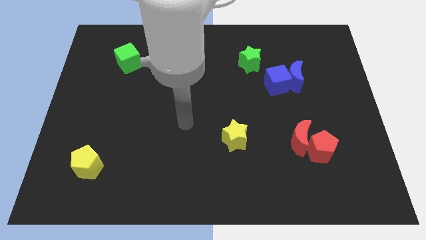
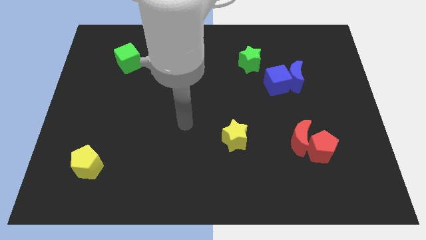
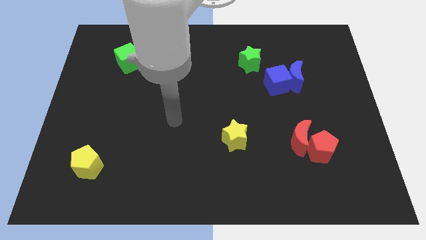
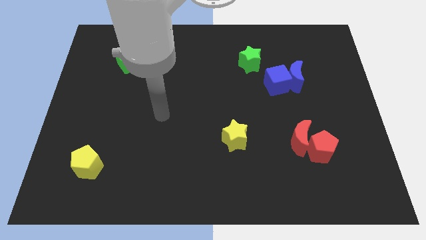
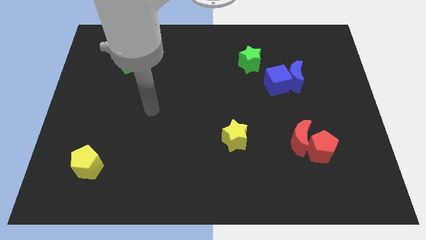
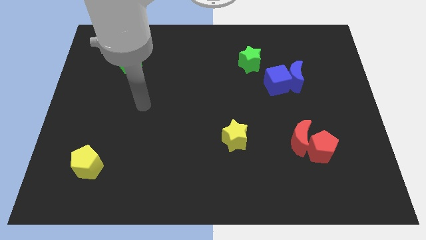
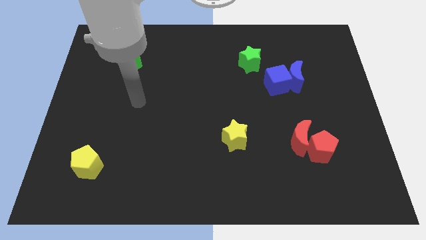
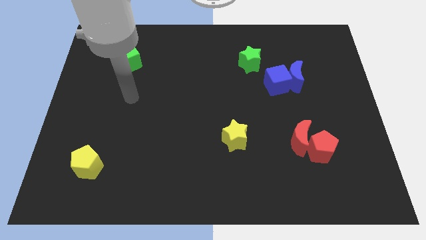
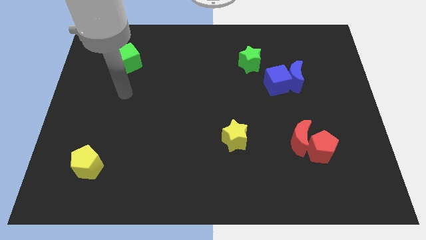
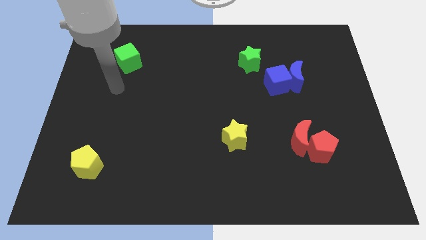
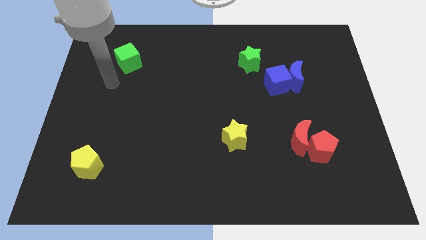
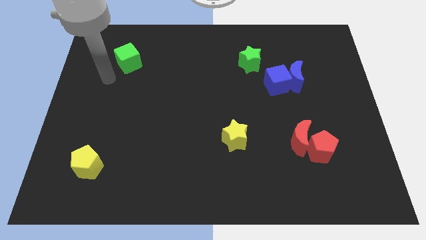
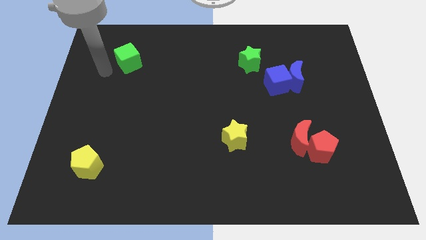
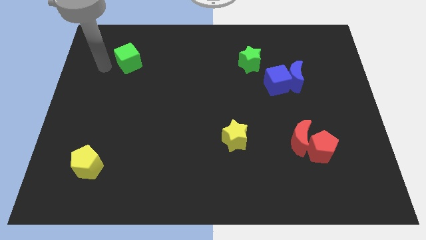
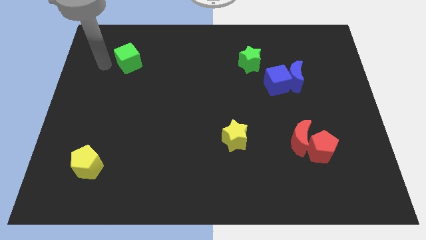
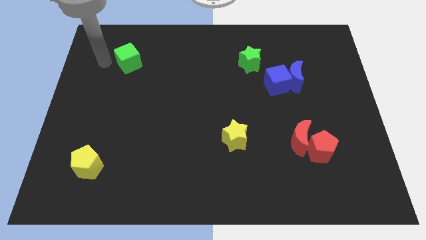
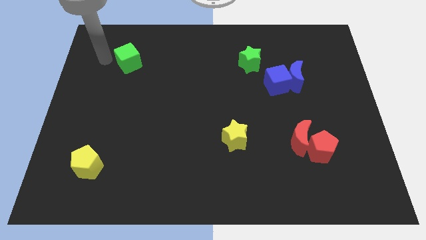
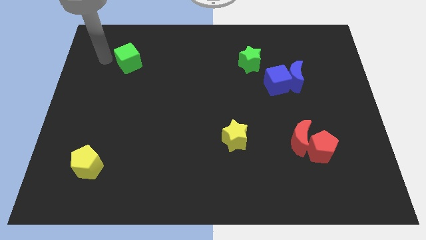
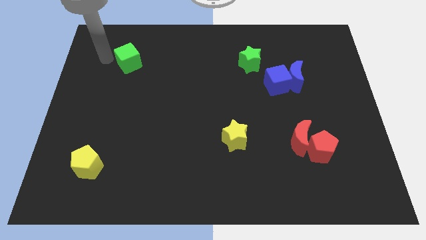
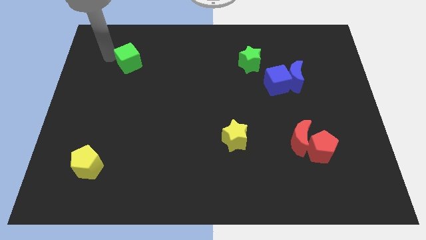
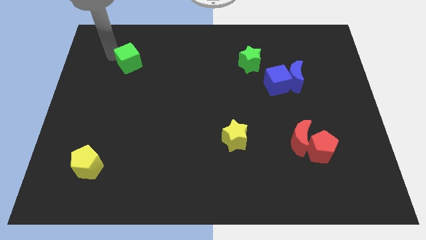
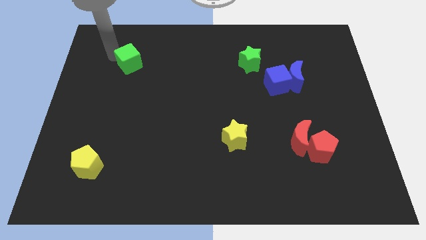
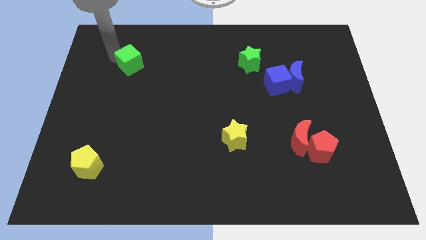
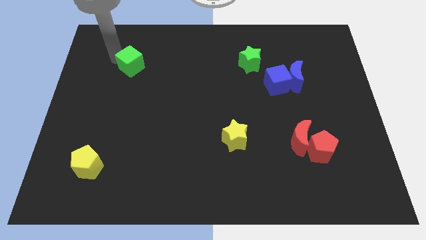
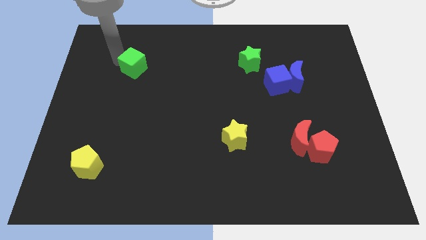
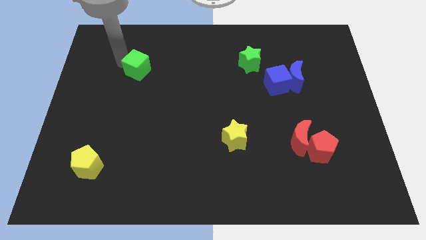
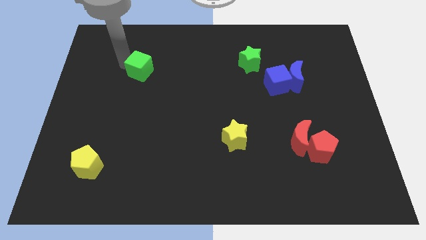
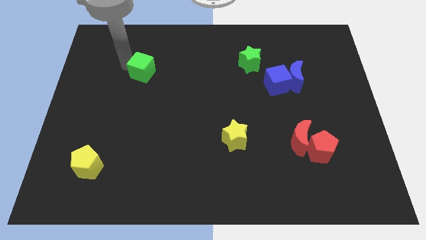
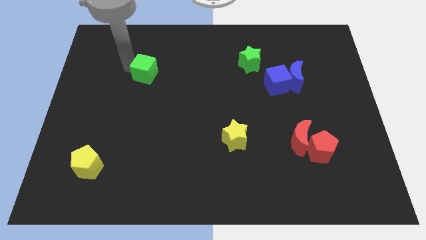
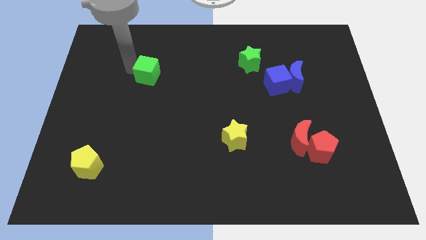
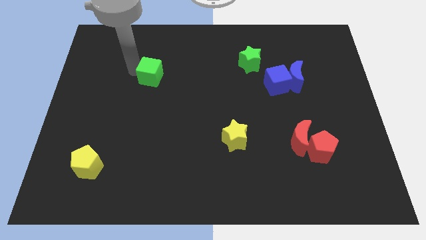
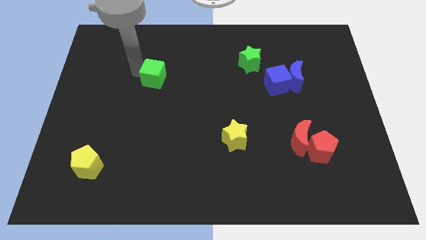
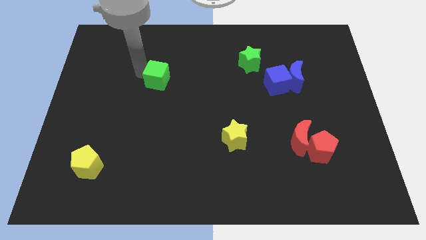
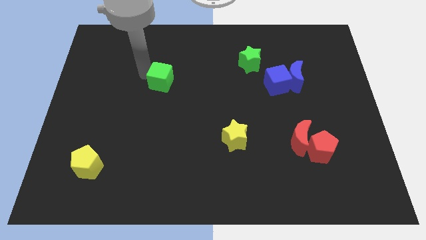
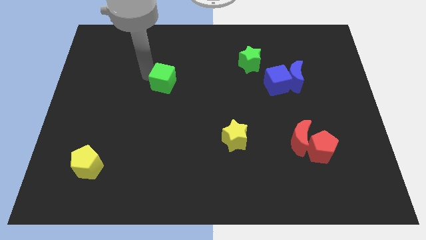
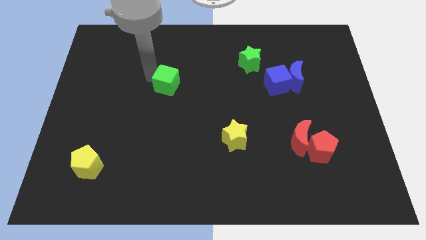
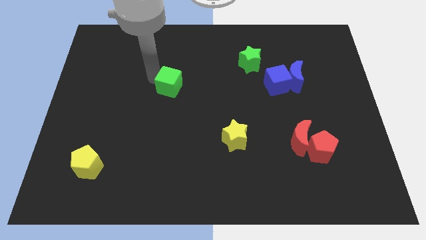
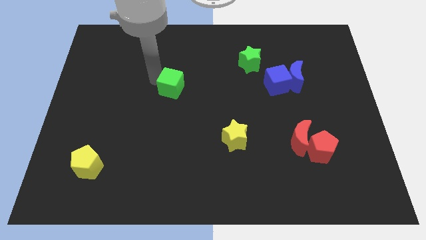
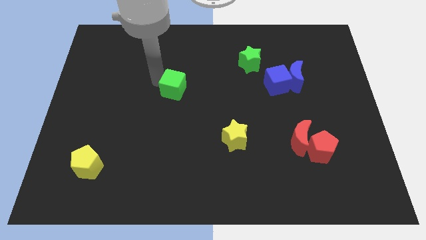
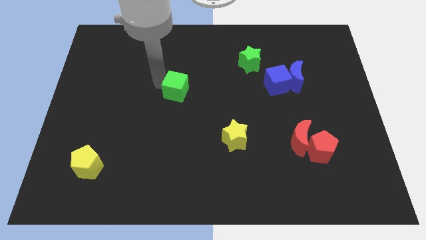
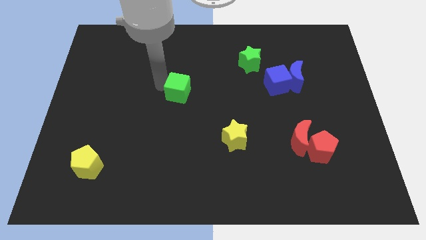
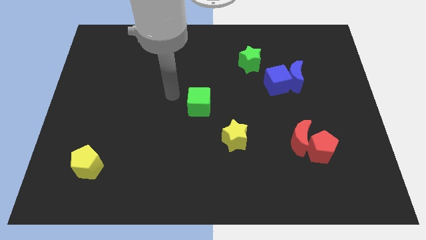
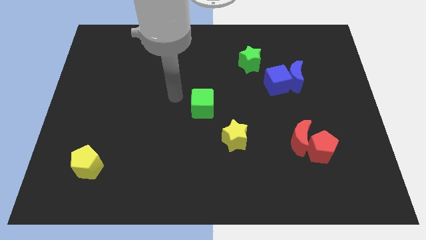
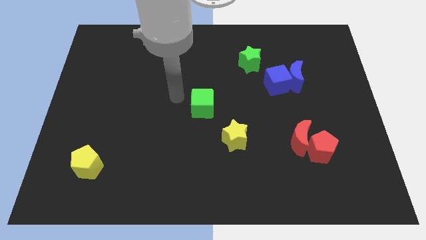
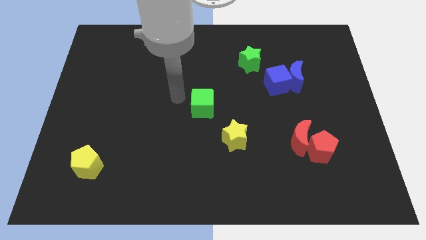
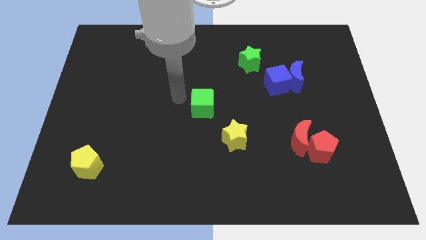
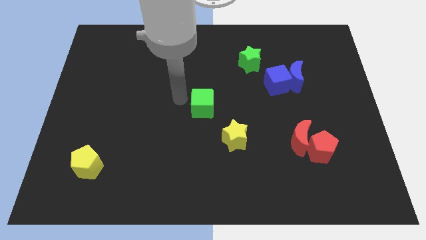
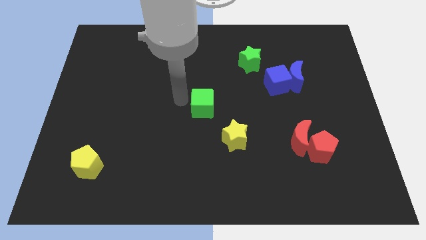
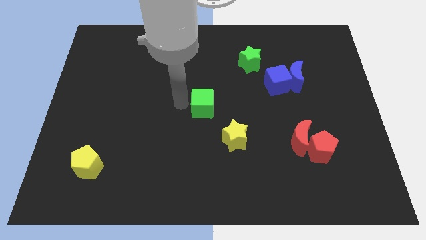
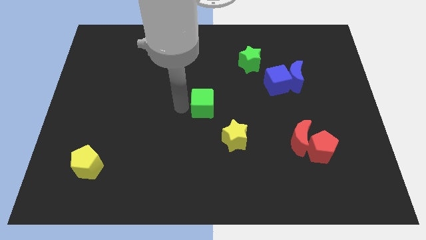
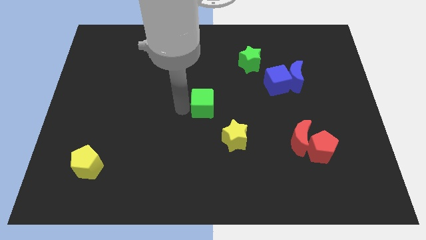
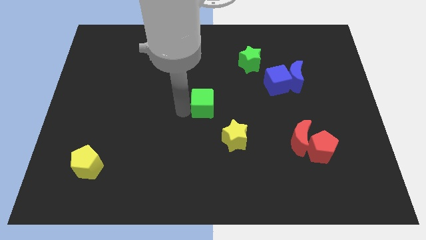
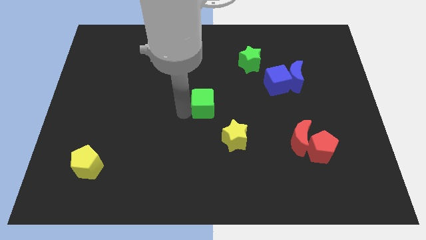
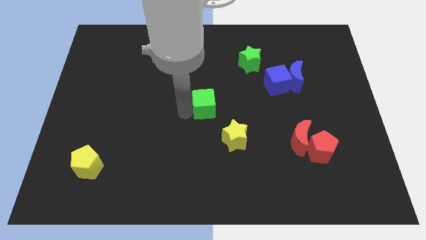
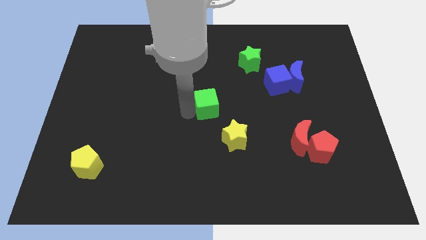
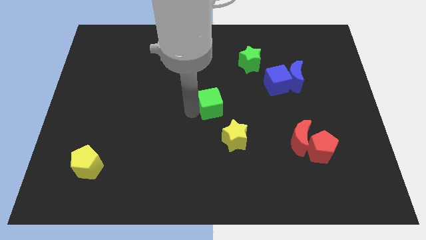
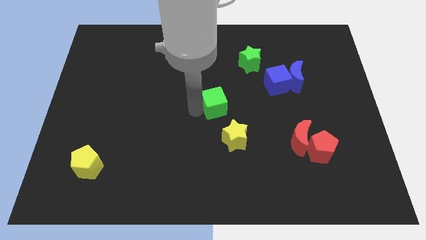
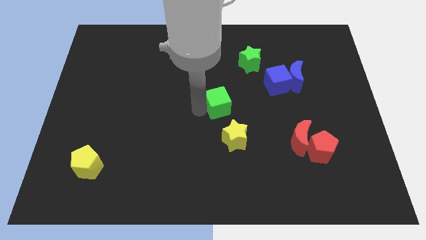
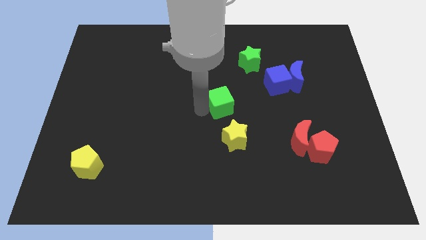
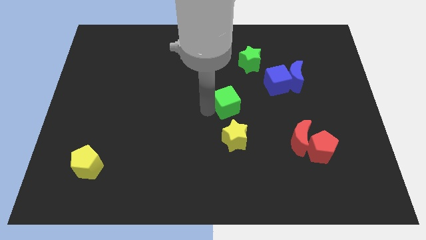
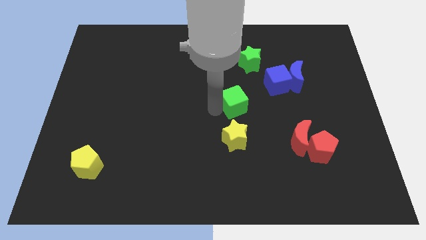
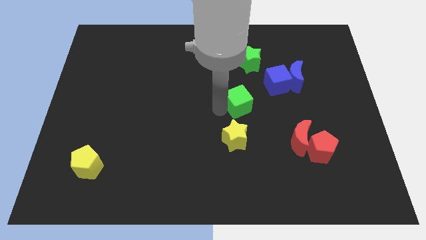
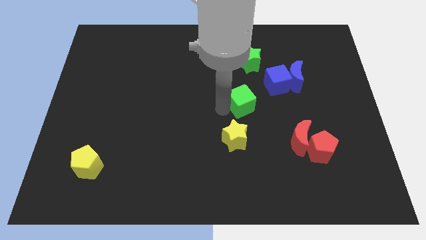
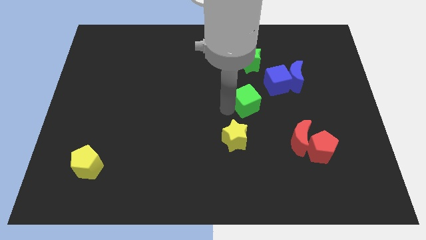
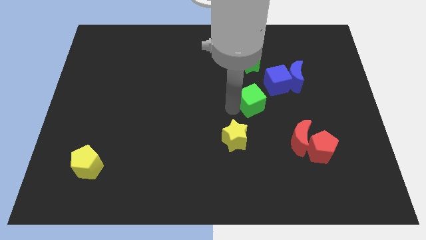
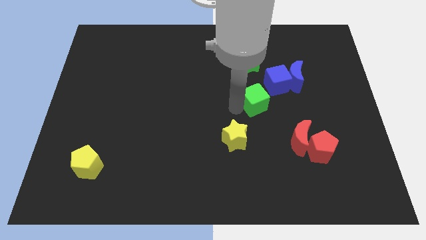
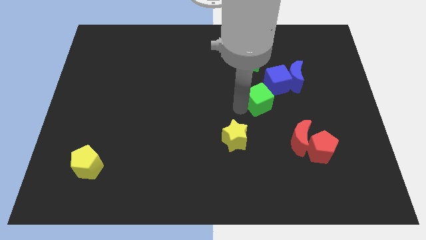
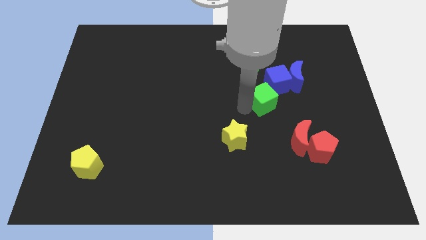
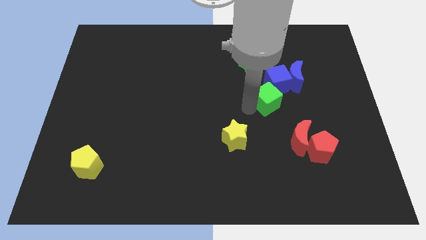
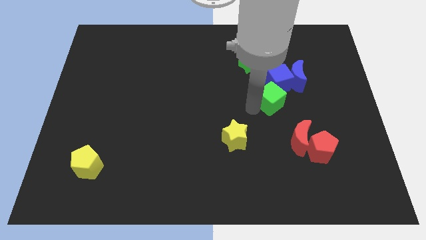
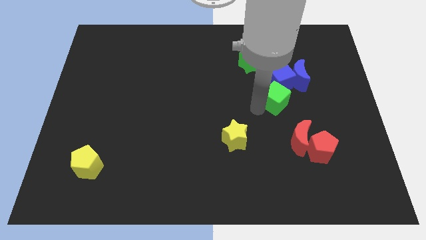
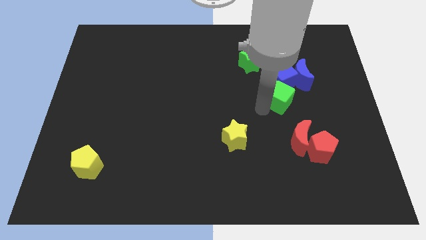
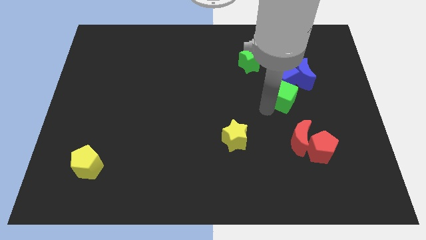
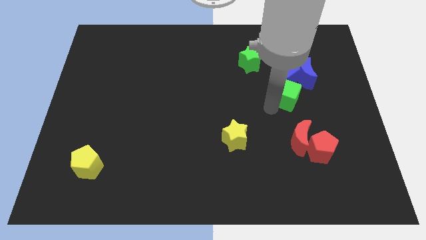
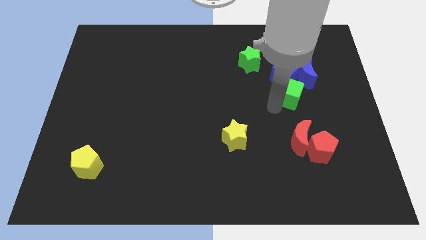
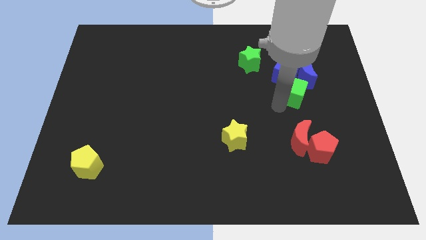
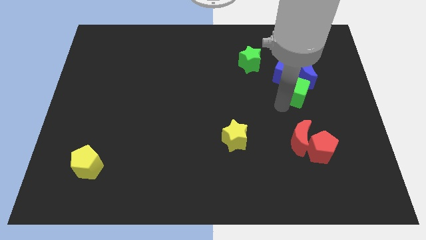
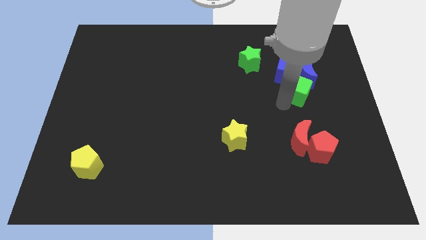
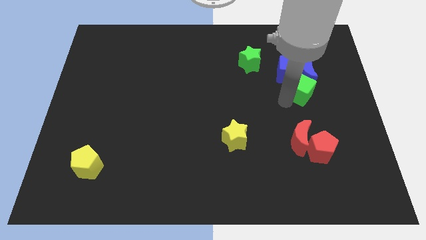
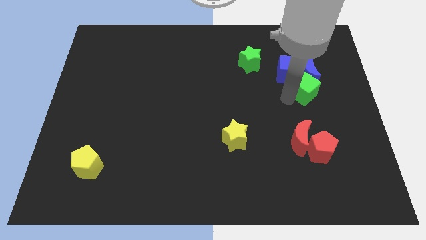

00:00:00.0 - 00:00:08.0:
slide the green cube close to the blue moon

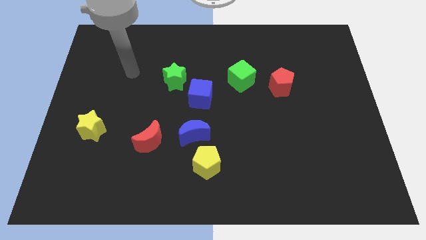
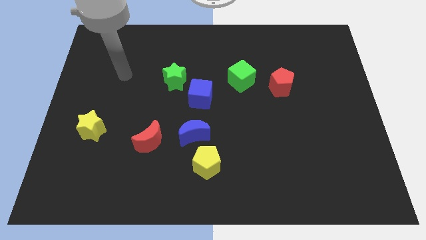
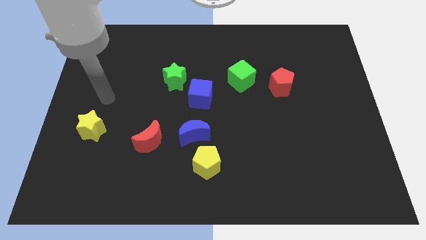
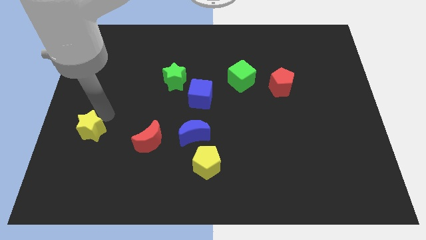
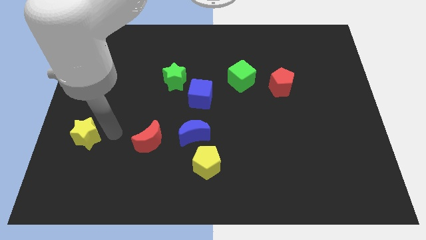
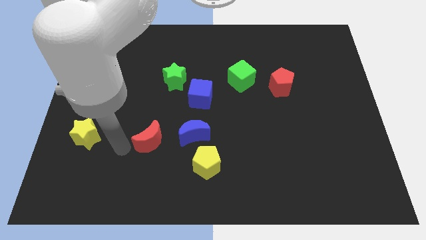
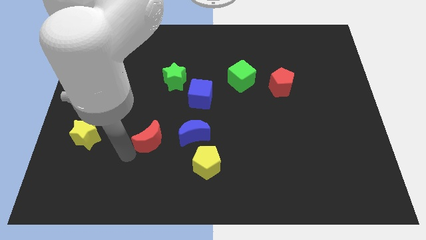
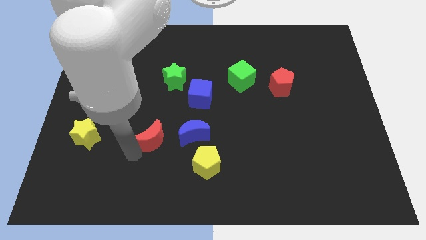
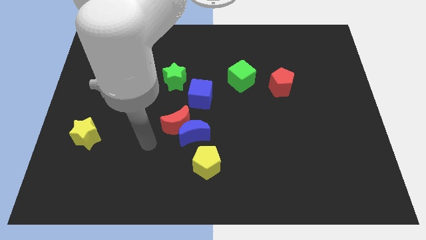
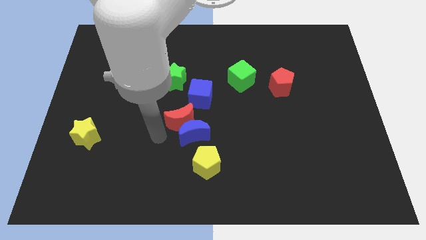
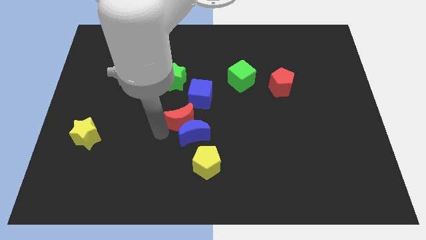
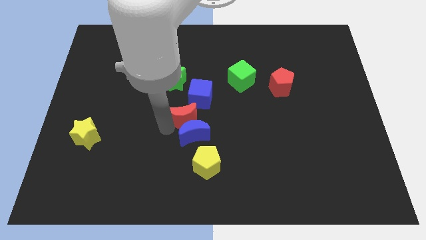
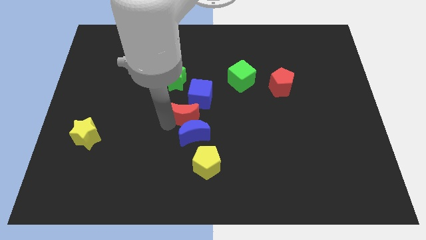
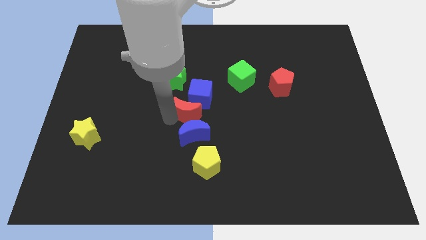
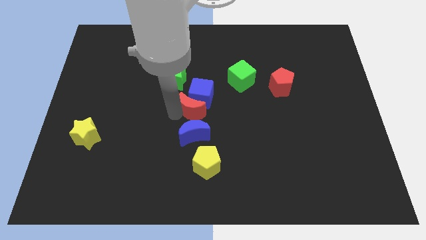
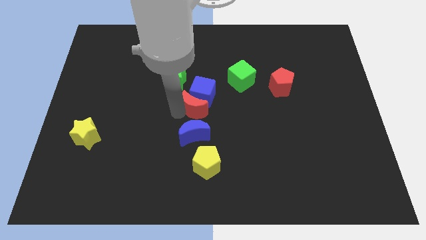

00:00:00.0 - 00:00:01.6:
put the red moon to the blue cube
